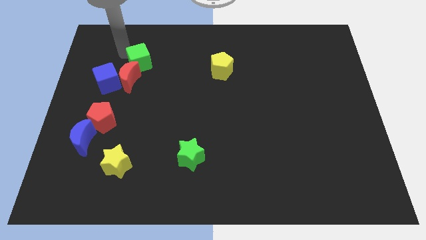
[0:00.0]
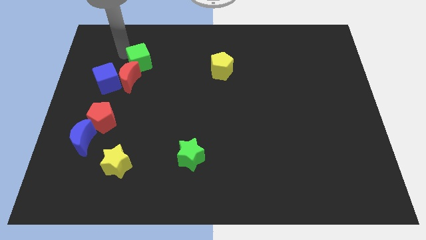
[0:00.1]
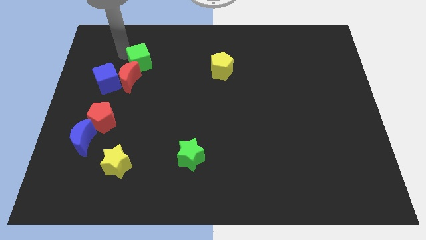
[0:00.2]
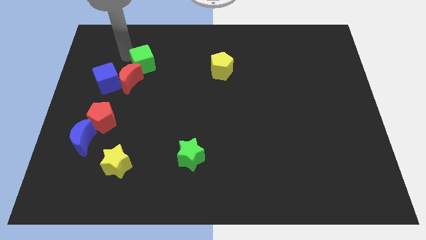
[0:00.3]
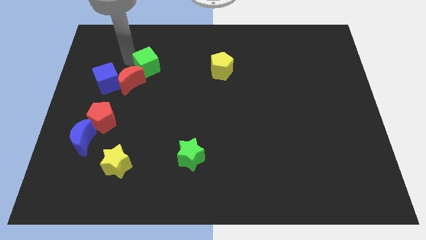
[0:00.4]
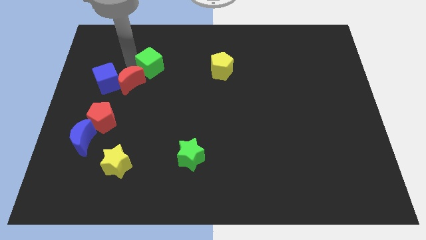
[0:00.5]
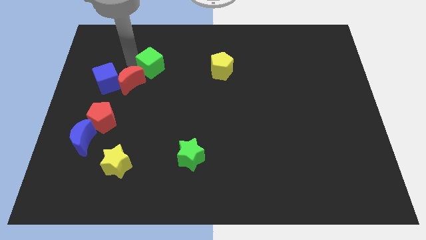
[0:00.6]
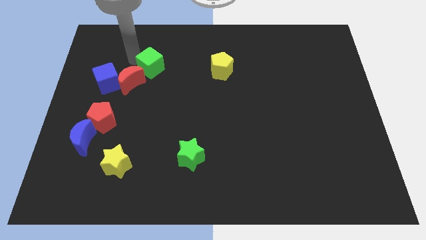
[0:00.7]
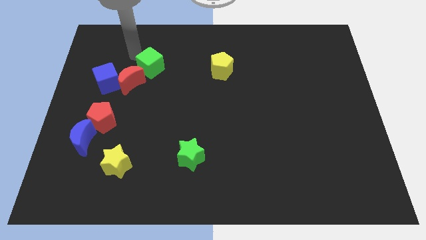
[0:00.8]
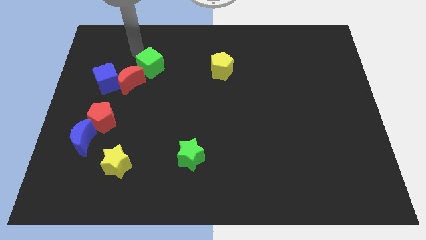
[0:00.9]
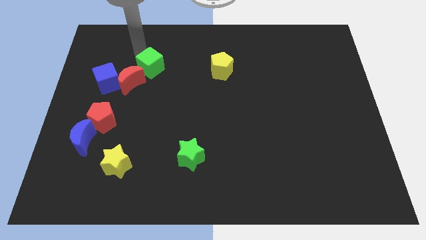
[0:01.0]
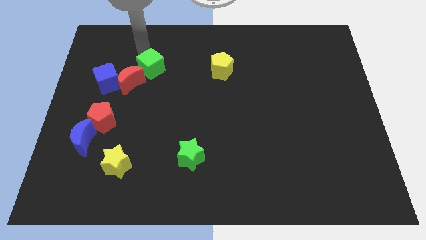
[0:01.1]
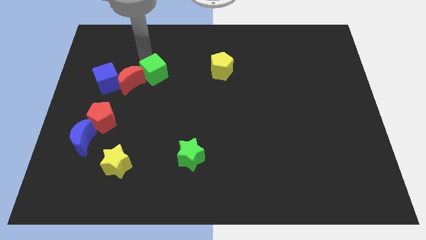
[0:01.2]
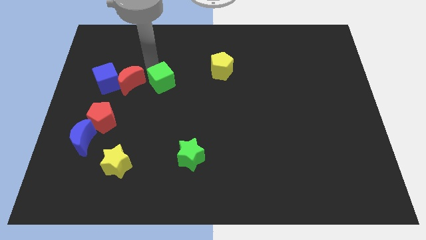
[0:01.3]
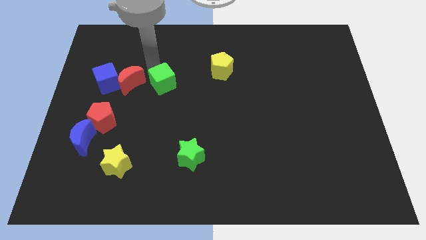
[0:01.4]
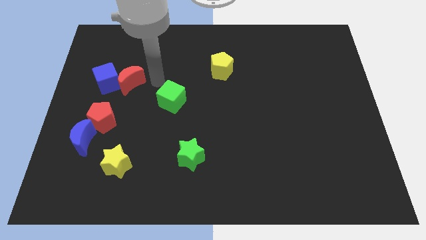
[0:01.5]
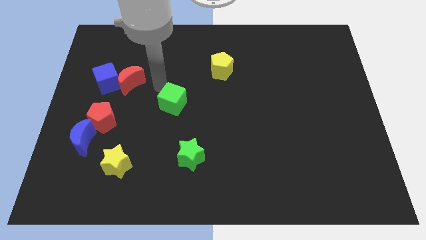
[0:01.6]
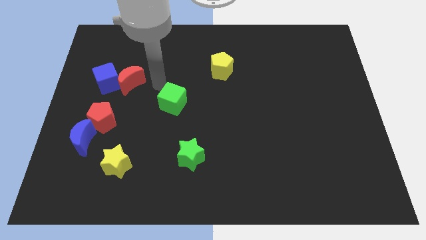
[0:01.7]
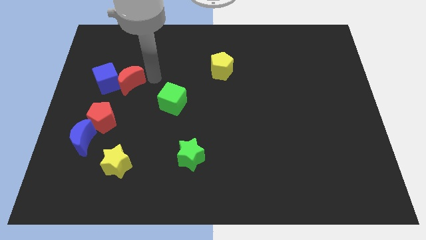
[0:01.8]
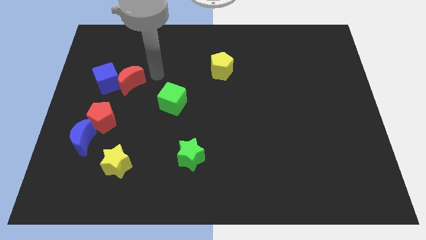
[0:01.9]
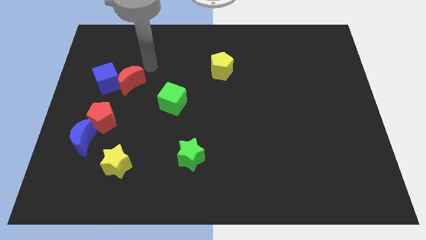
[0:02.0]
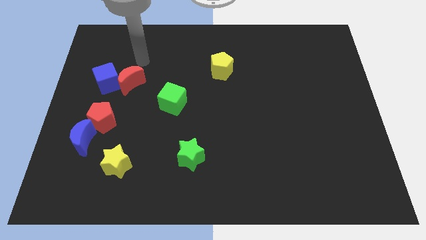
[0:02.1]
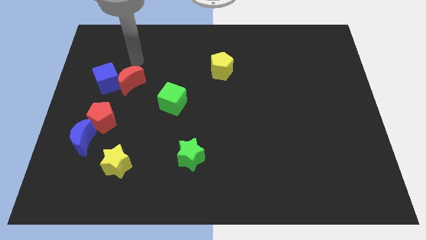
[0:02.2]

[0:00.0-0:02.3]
separate green cube form red moon

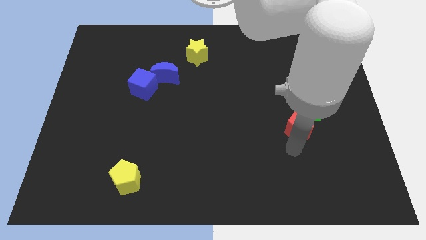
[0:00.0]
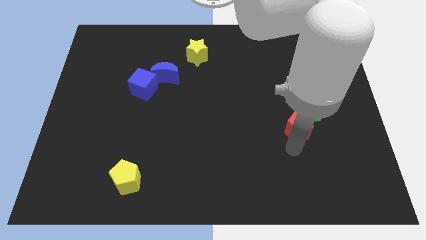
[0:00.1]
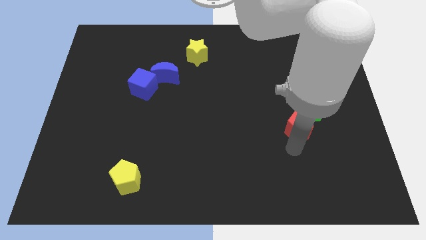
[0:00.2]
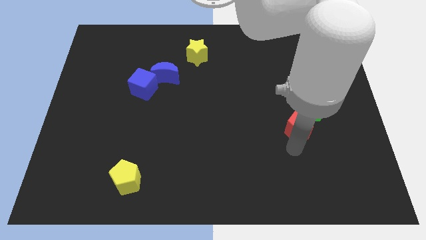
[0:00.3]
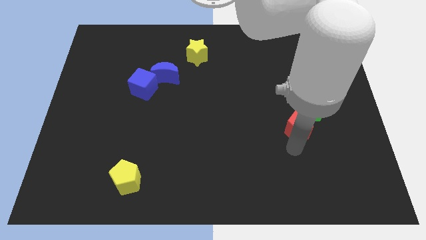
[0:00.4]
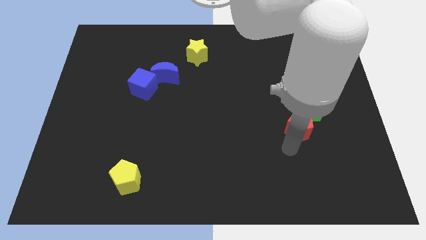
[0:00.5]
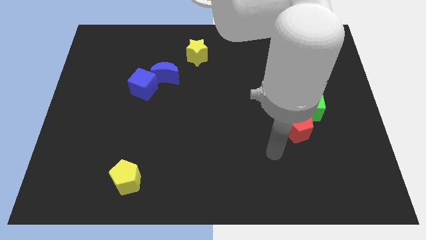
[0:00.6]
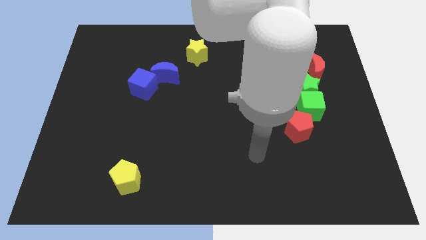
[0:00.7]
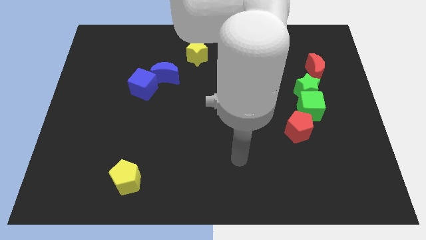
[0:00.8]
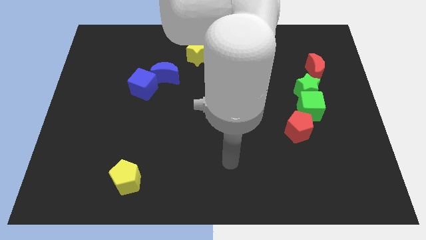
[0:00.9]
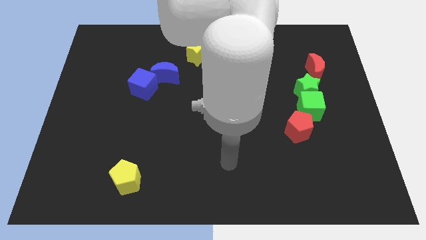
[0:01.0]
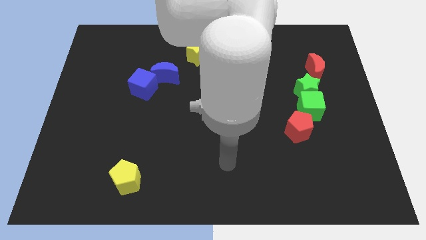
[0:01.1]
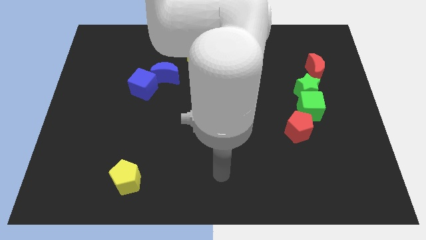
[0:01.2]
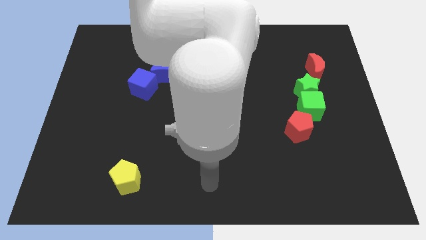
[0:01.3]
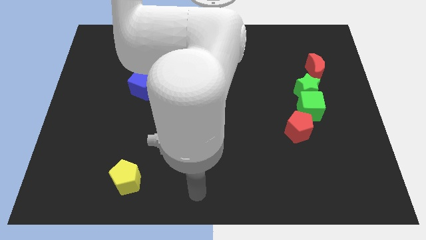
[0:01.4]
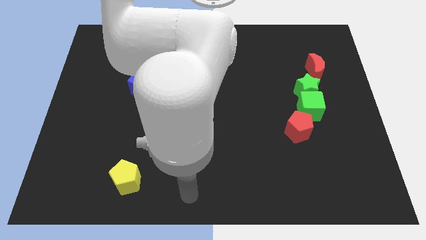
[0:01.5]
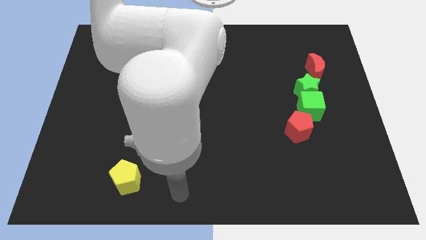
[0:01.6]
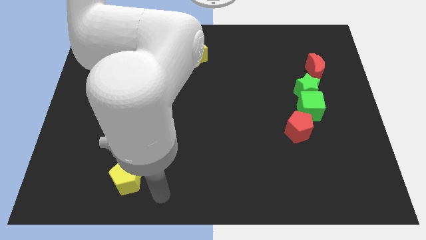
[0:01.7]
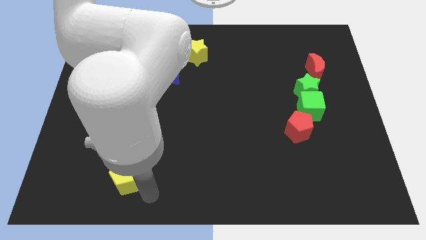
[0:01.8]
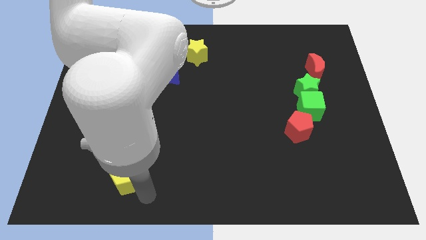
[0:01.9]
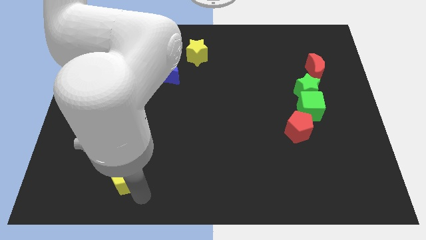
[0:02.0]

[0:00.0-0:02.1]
move your arm from red pentagon to the bottom of the yellow pentagon

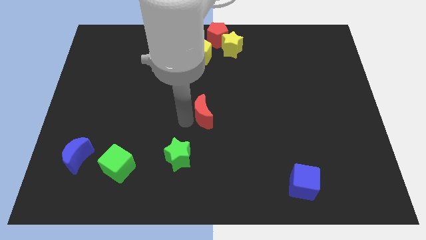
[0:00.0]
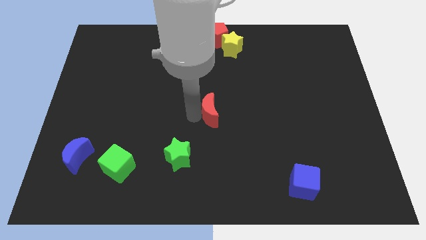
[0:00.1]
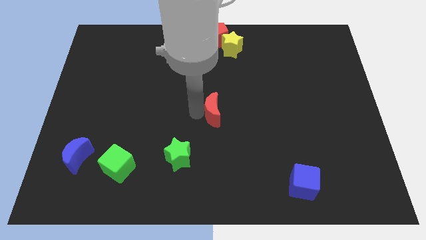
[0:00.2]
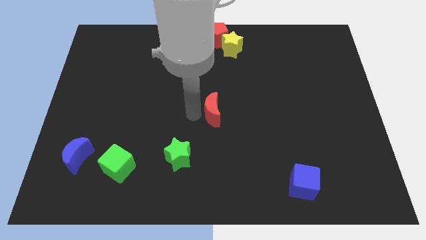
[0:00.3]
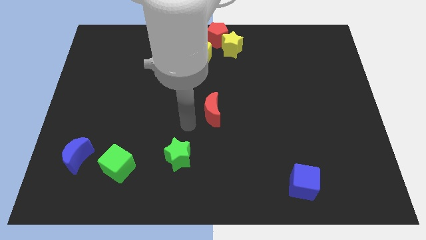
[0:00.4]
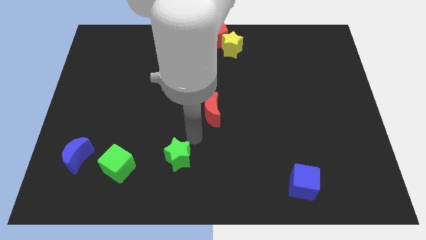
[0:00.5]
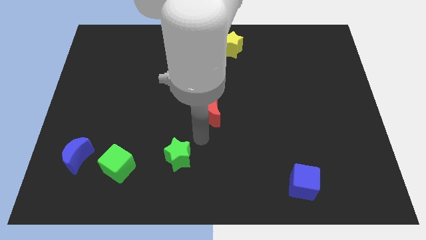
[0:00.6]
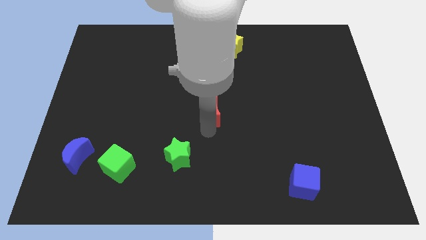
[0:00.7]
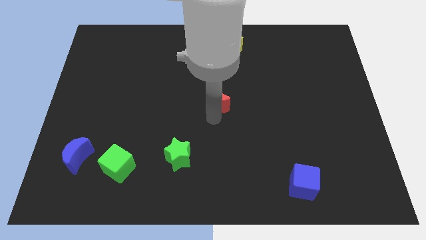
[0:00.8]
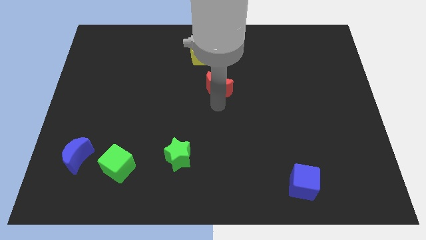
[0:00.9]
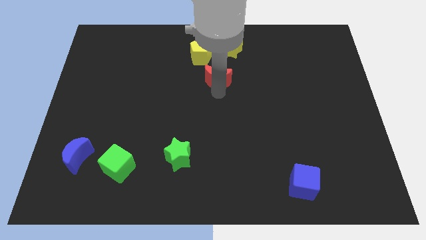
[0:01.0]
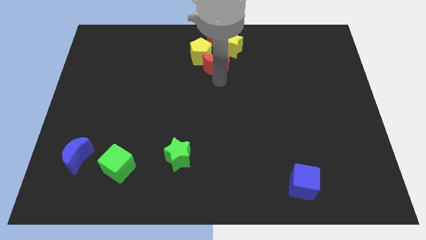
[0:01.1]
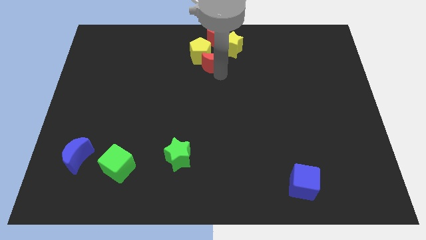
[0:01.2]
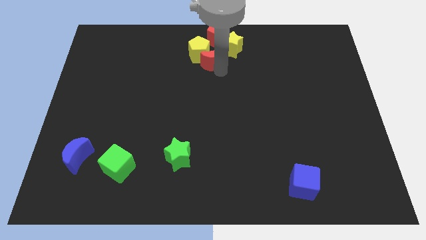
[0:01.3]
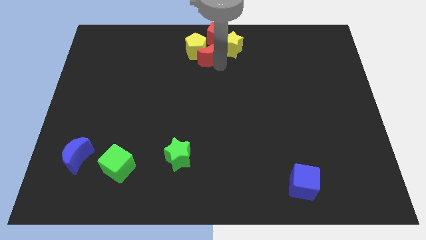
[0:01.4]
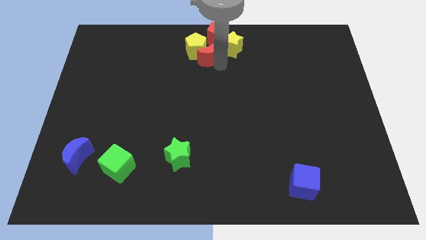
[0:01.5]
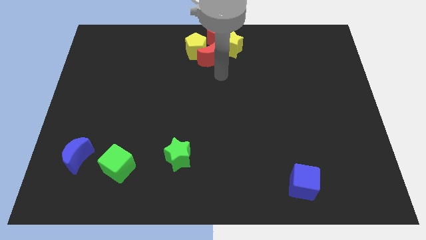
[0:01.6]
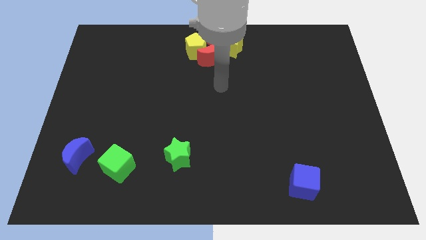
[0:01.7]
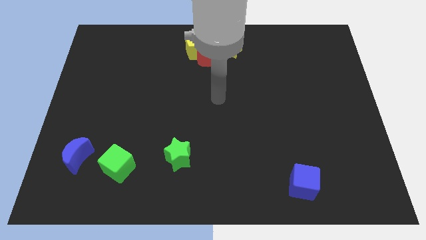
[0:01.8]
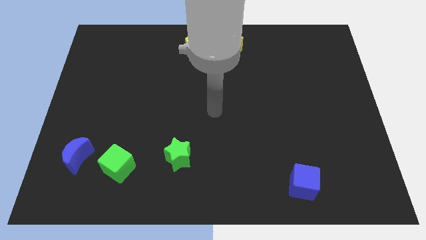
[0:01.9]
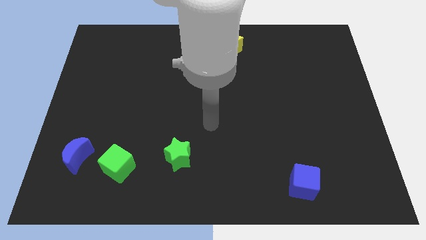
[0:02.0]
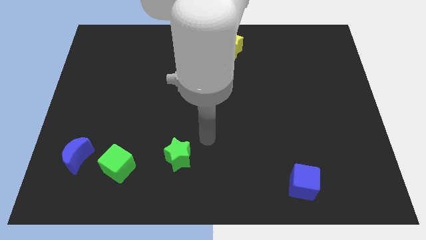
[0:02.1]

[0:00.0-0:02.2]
move red moon towards yellow blocks

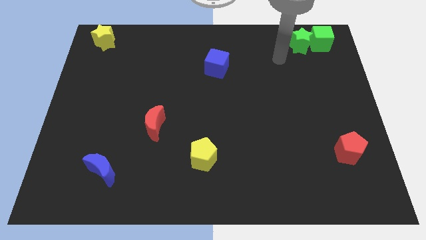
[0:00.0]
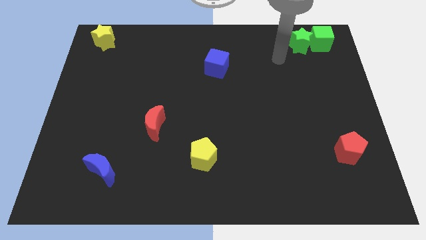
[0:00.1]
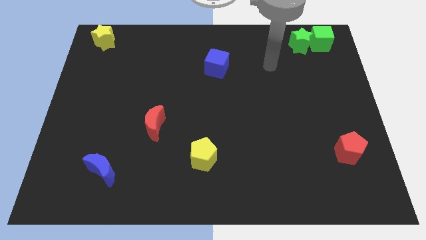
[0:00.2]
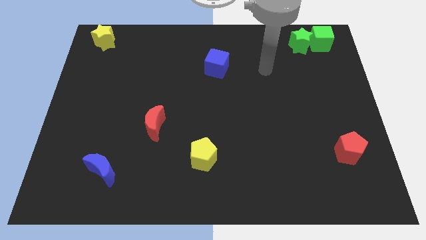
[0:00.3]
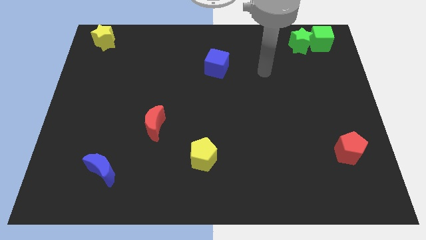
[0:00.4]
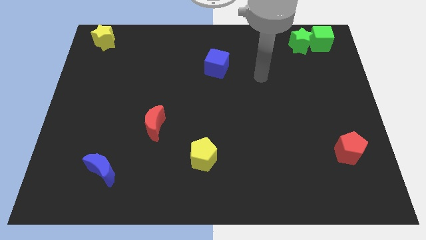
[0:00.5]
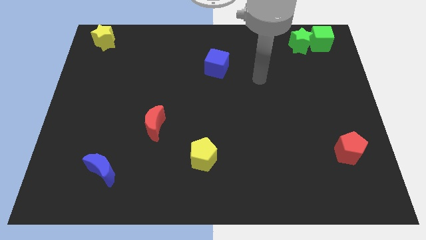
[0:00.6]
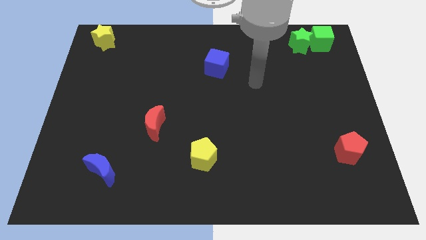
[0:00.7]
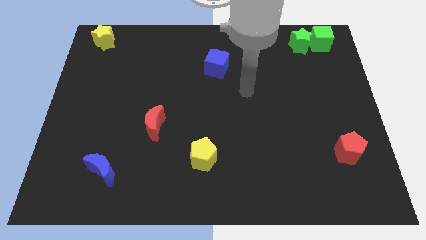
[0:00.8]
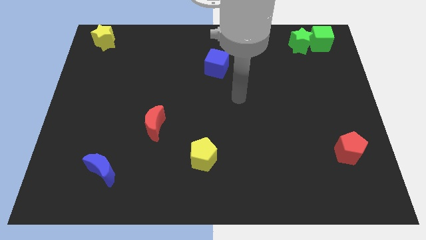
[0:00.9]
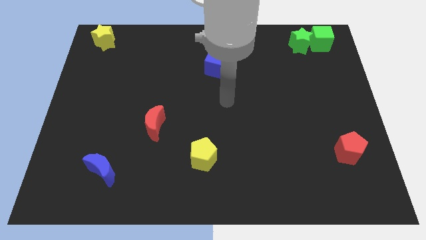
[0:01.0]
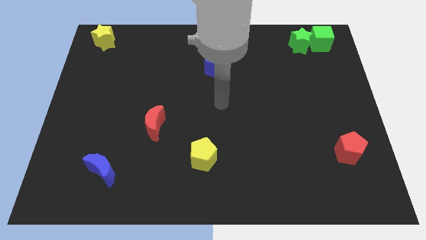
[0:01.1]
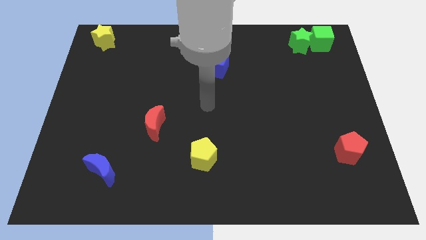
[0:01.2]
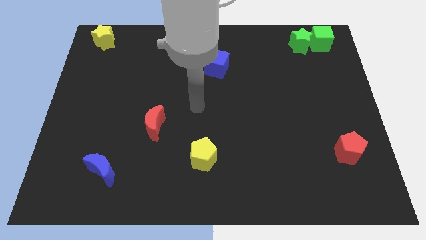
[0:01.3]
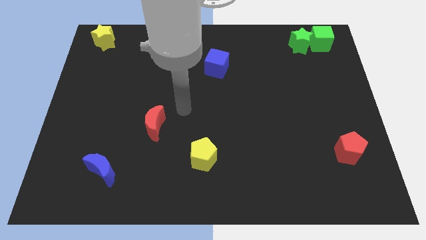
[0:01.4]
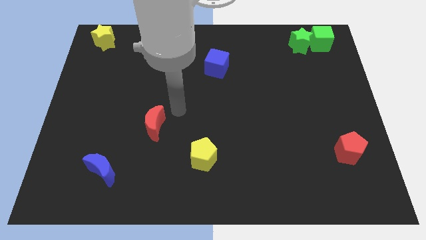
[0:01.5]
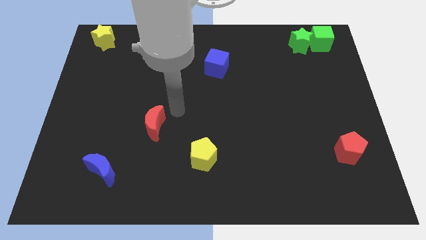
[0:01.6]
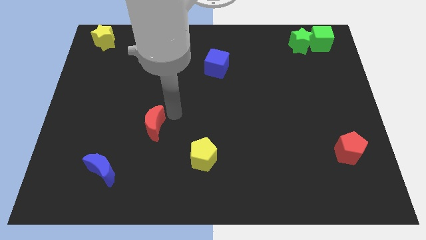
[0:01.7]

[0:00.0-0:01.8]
move your arm to the top of the red moon

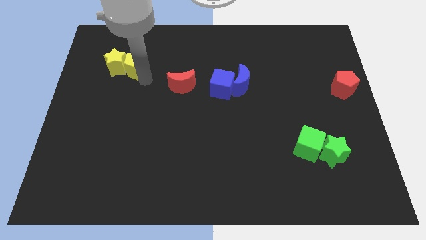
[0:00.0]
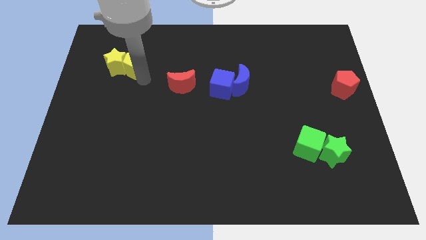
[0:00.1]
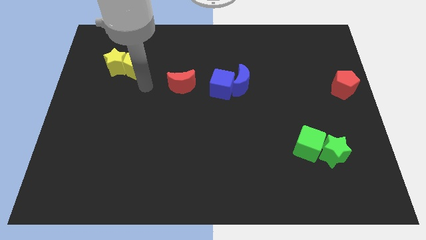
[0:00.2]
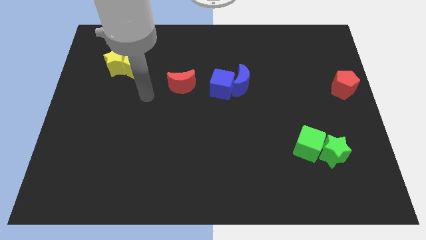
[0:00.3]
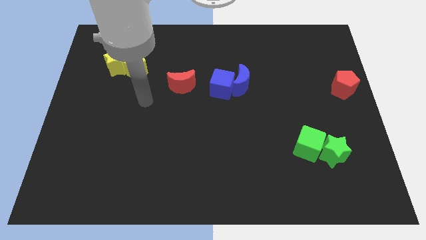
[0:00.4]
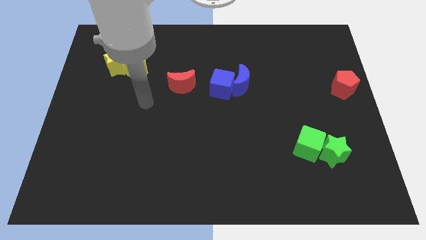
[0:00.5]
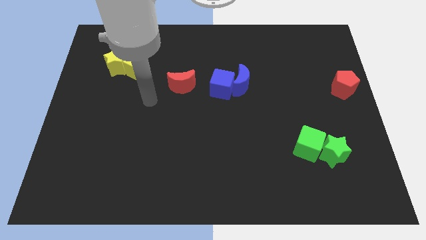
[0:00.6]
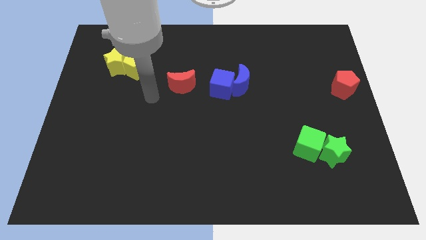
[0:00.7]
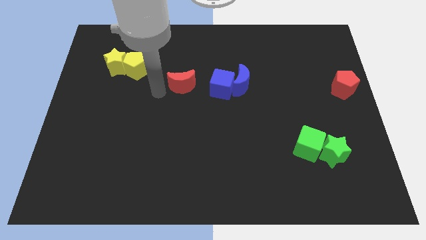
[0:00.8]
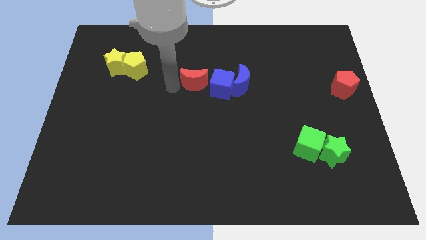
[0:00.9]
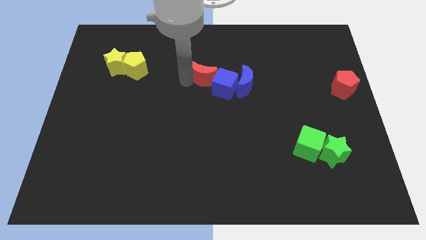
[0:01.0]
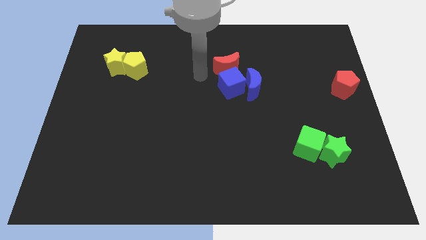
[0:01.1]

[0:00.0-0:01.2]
move the red moon slide to the blue cube
